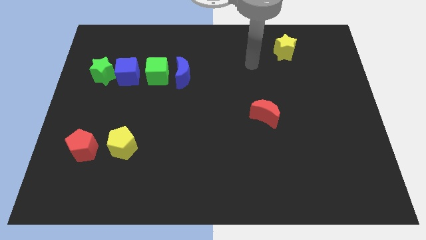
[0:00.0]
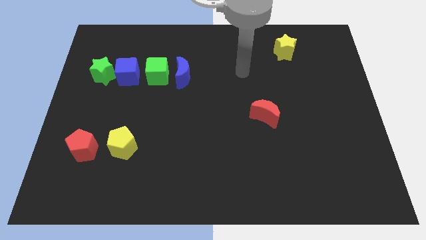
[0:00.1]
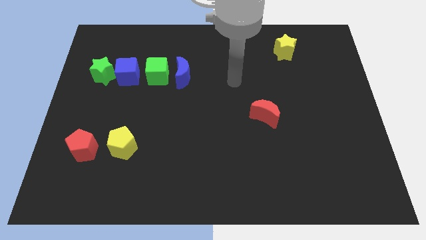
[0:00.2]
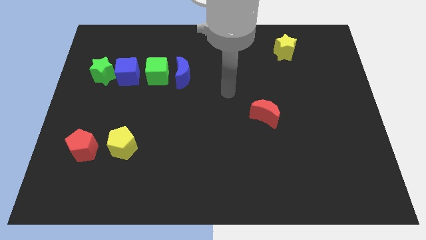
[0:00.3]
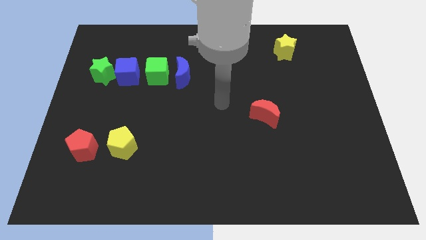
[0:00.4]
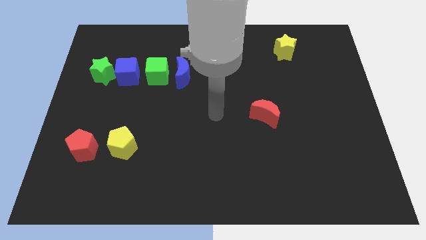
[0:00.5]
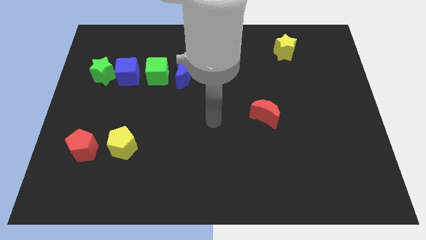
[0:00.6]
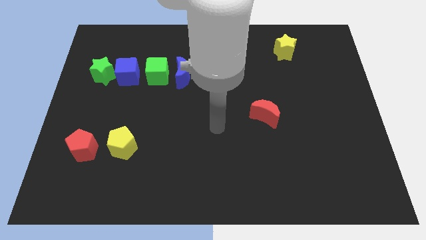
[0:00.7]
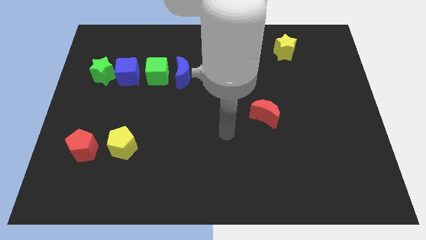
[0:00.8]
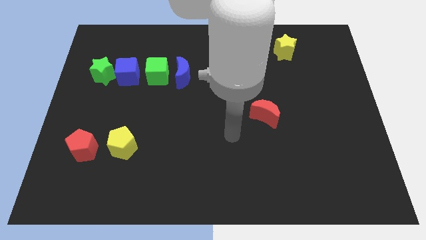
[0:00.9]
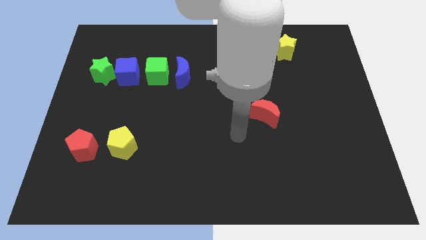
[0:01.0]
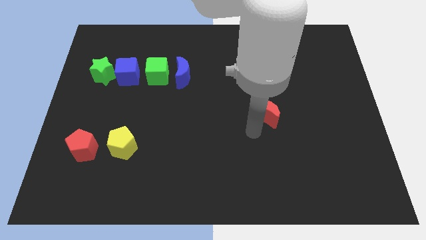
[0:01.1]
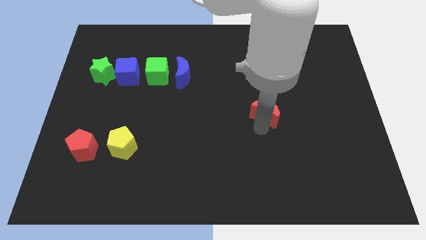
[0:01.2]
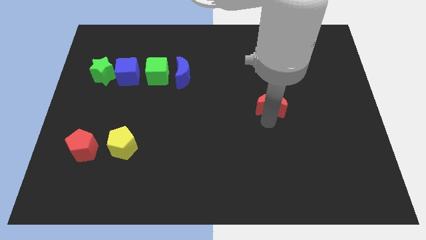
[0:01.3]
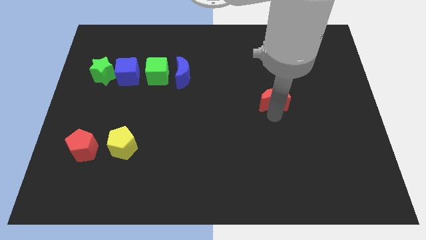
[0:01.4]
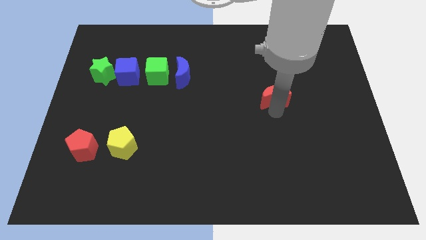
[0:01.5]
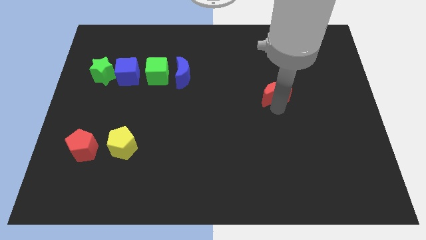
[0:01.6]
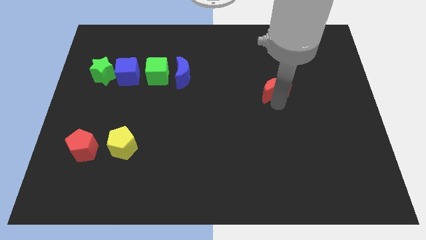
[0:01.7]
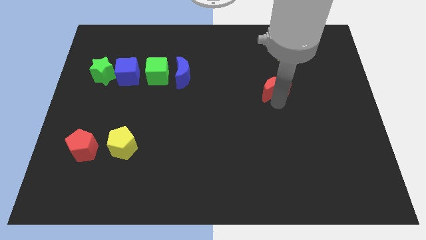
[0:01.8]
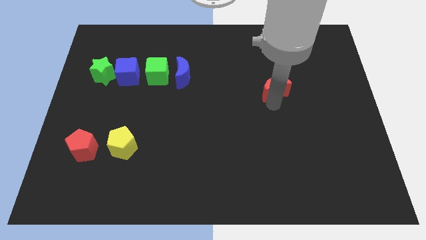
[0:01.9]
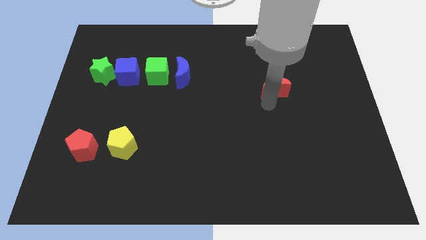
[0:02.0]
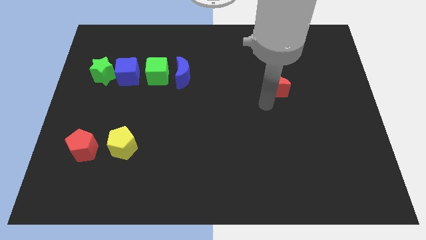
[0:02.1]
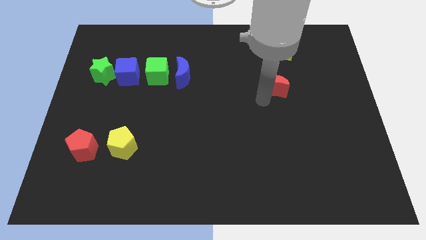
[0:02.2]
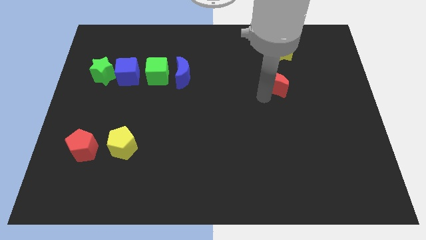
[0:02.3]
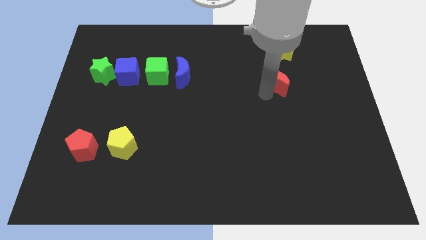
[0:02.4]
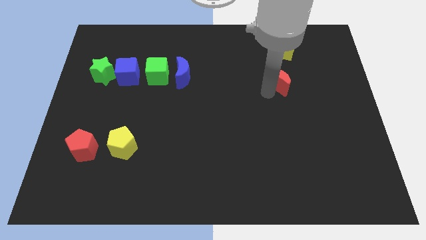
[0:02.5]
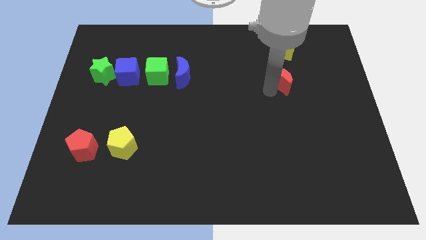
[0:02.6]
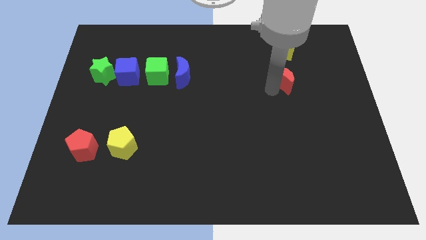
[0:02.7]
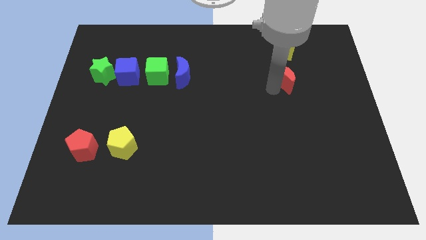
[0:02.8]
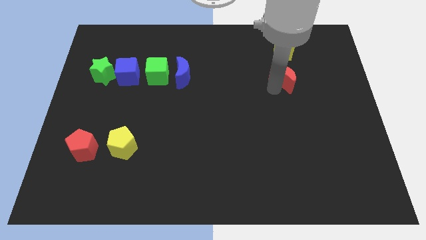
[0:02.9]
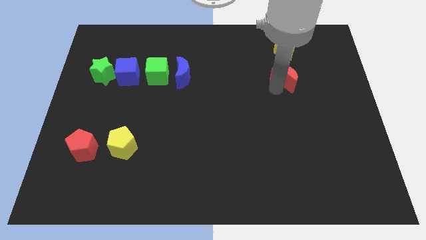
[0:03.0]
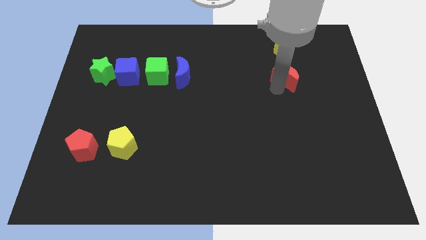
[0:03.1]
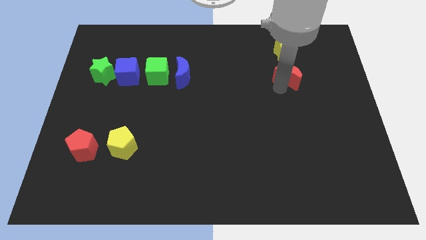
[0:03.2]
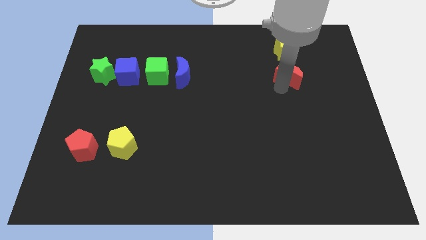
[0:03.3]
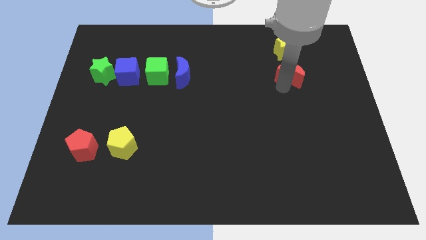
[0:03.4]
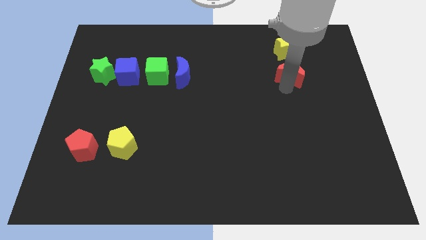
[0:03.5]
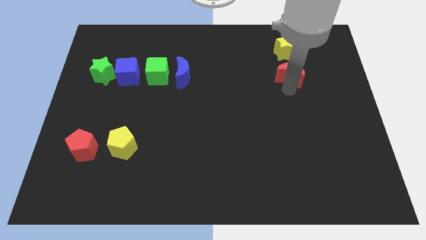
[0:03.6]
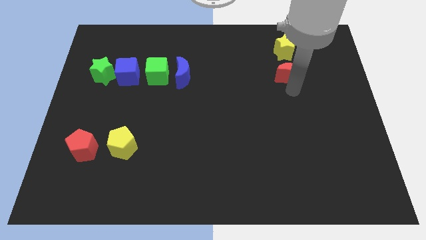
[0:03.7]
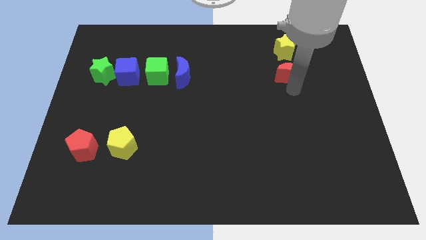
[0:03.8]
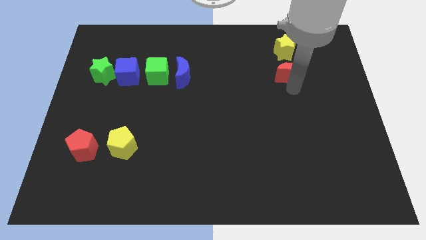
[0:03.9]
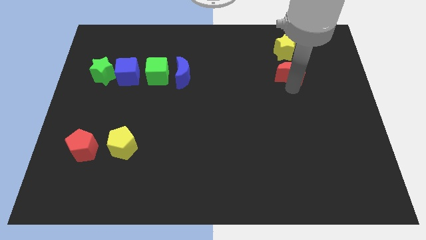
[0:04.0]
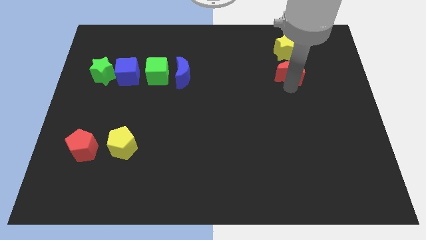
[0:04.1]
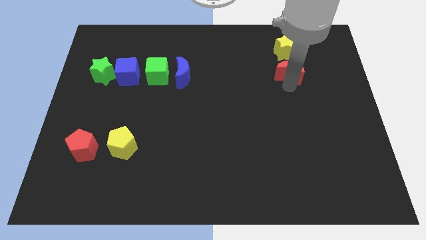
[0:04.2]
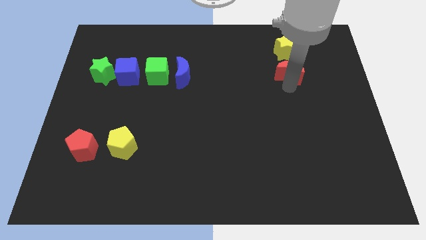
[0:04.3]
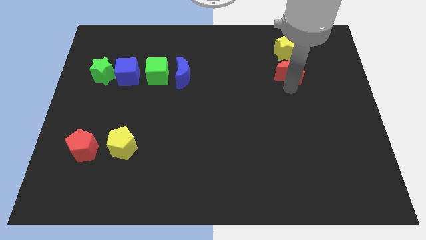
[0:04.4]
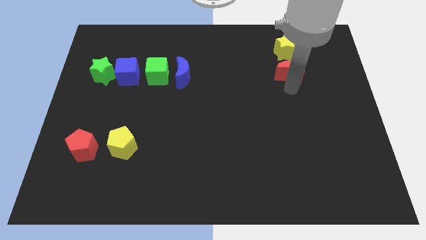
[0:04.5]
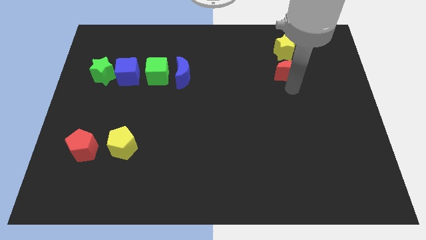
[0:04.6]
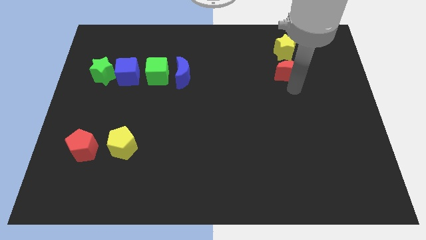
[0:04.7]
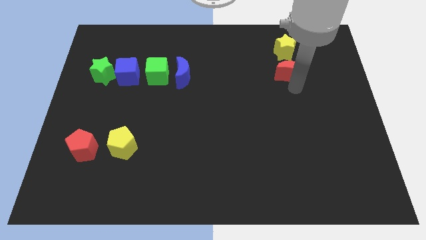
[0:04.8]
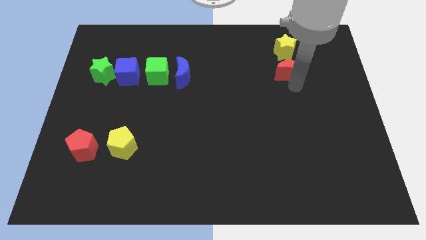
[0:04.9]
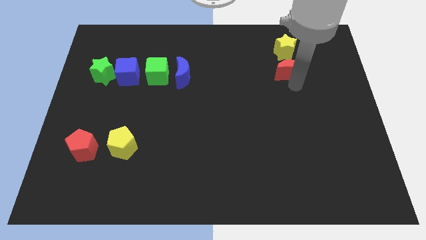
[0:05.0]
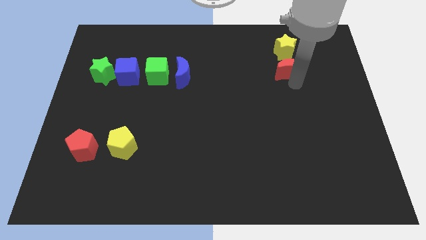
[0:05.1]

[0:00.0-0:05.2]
place the red moon down to the yellow star

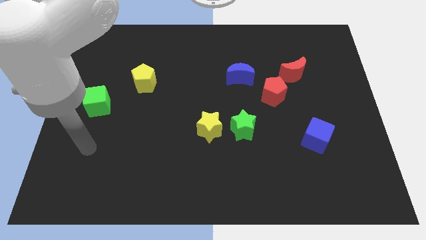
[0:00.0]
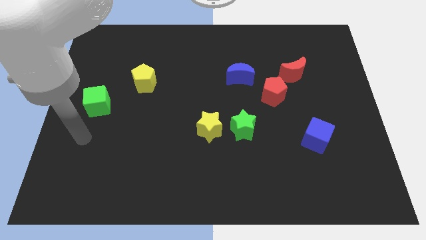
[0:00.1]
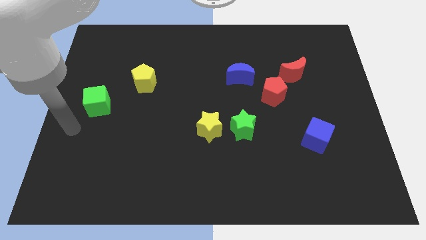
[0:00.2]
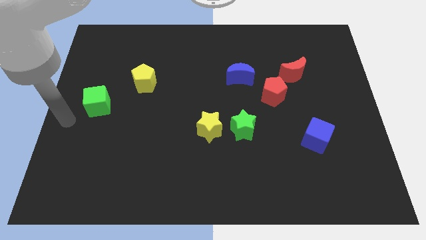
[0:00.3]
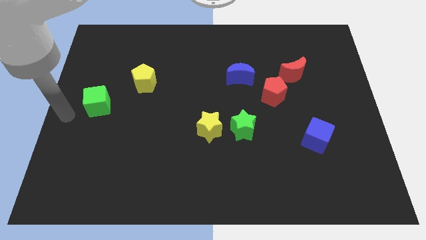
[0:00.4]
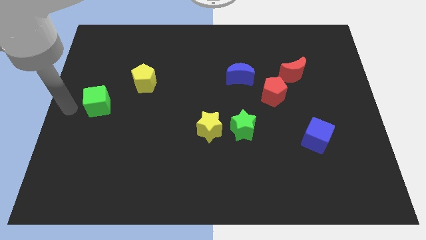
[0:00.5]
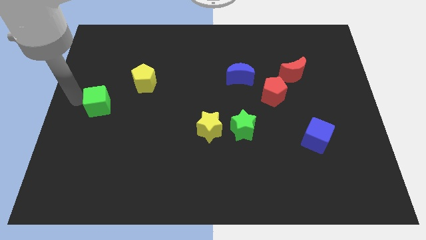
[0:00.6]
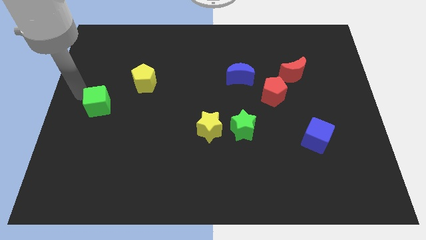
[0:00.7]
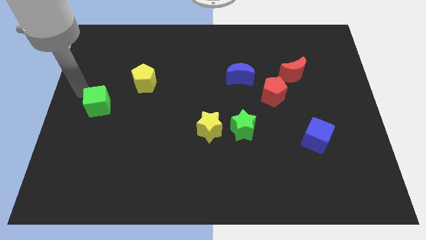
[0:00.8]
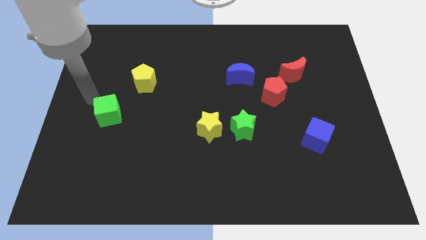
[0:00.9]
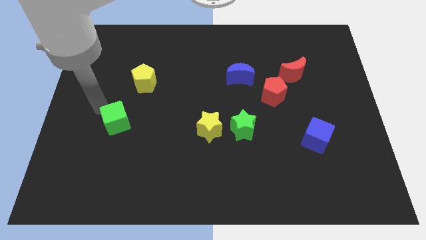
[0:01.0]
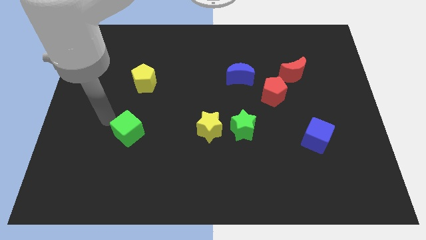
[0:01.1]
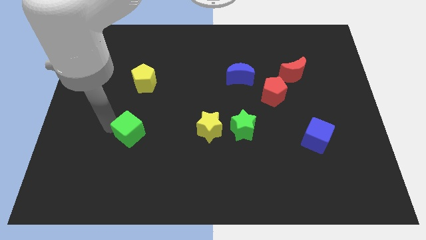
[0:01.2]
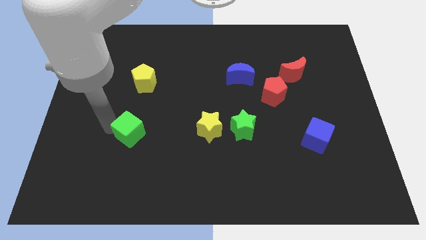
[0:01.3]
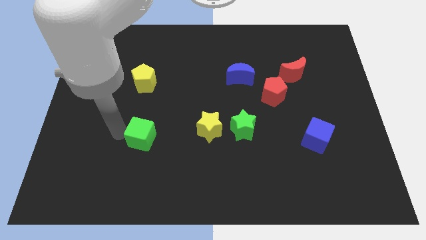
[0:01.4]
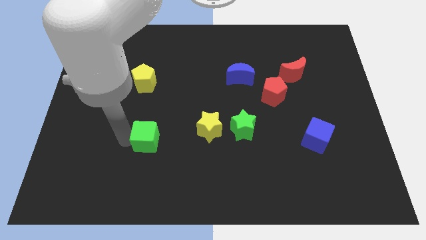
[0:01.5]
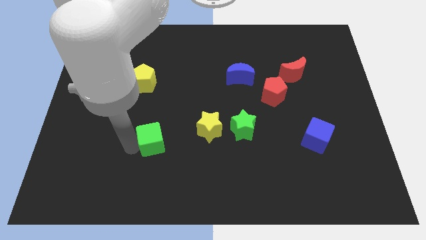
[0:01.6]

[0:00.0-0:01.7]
move green cube to the center

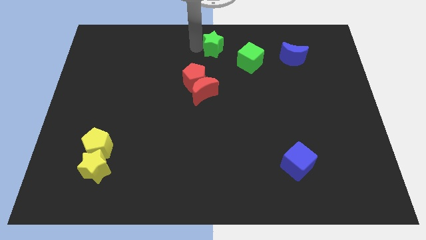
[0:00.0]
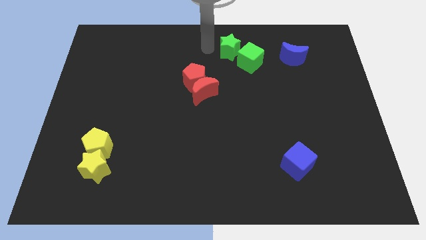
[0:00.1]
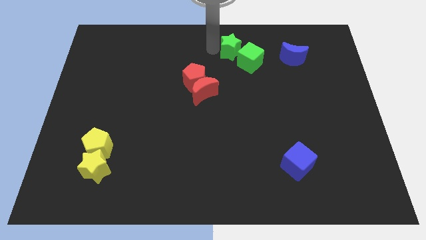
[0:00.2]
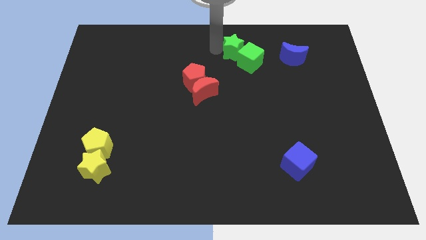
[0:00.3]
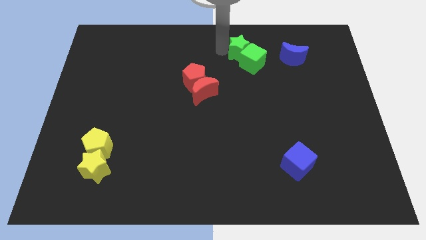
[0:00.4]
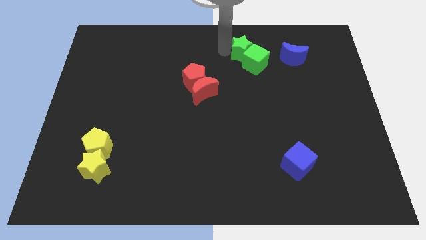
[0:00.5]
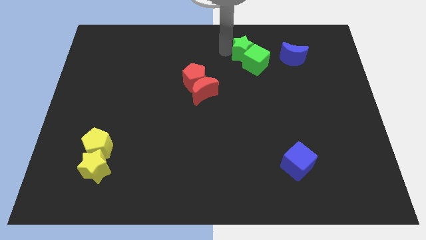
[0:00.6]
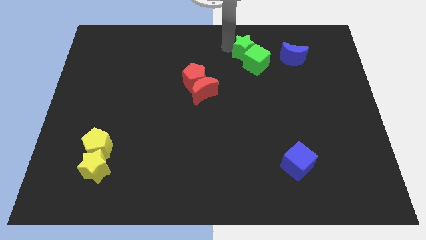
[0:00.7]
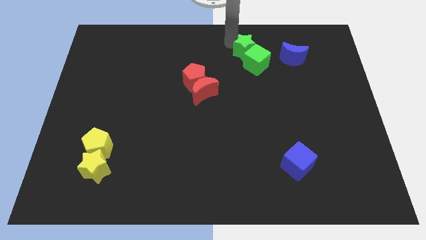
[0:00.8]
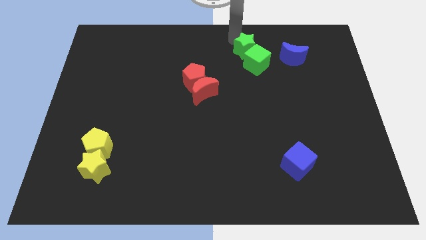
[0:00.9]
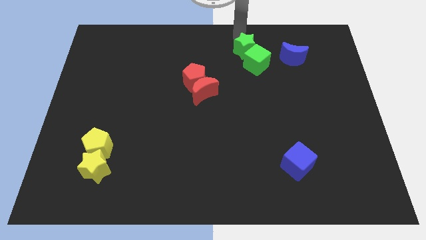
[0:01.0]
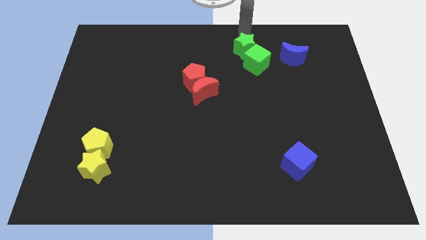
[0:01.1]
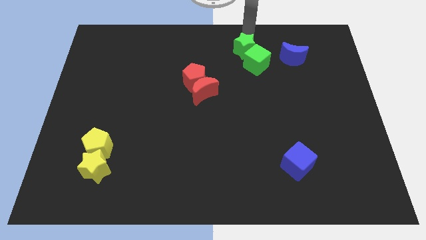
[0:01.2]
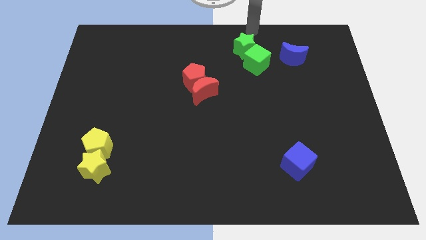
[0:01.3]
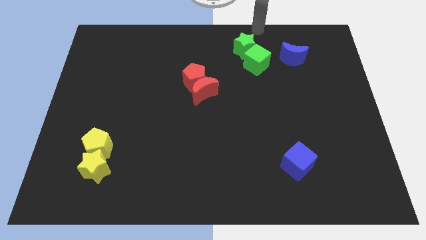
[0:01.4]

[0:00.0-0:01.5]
put green star into the green cube

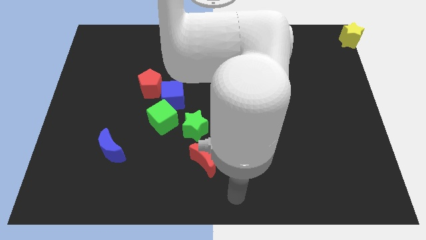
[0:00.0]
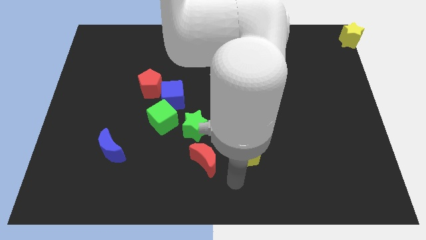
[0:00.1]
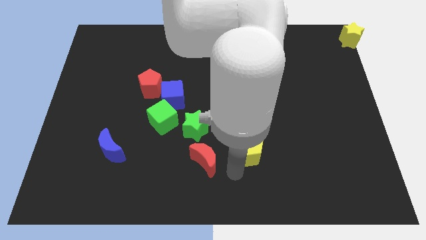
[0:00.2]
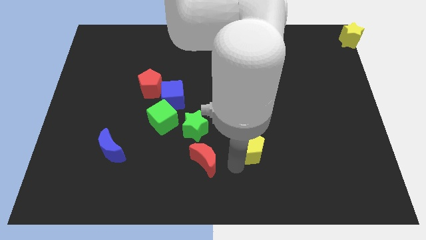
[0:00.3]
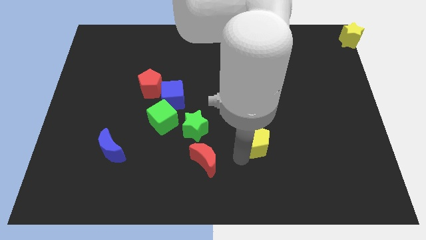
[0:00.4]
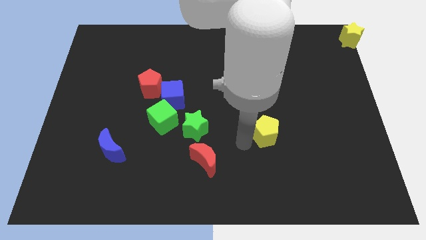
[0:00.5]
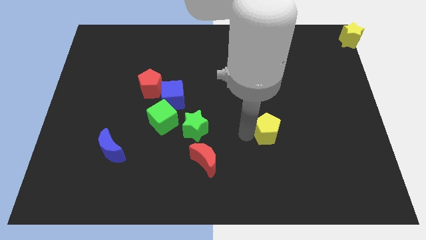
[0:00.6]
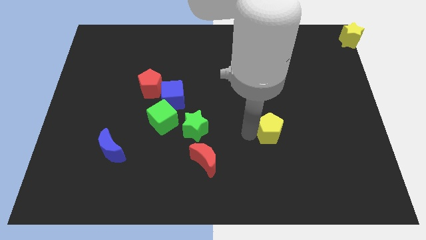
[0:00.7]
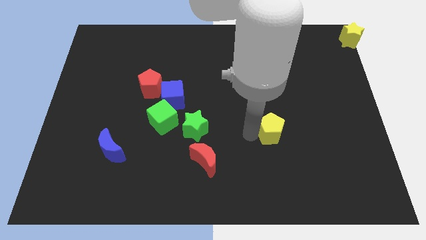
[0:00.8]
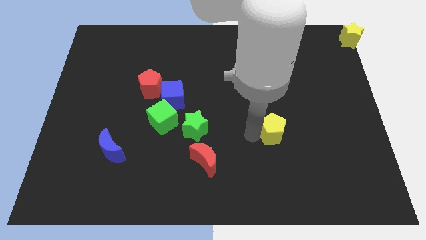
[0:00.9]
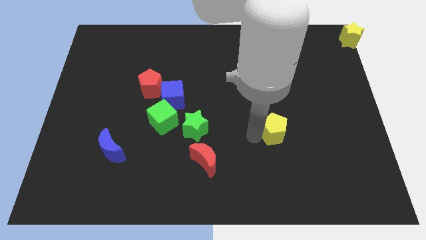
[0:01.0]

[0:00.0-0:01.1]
push the yellow pentagon to the right of the green star
